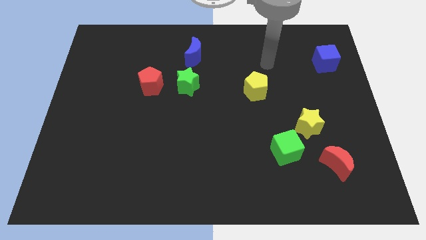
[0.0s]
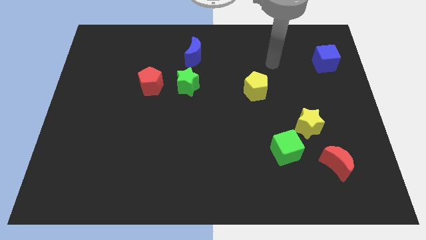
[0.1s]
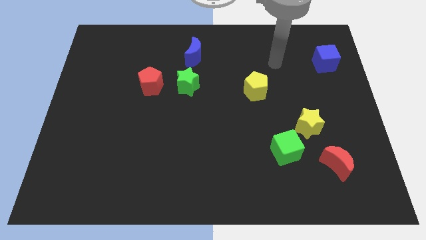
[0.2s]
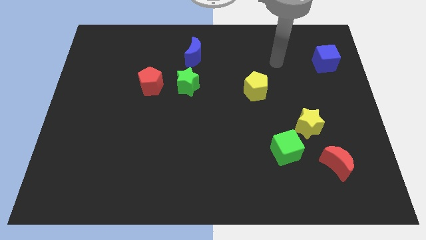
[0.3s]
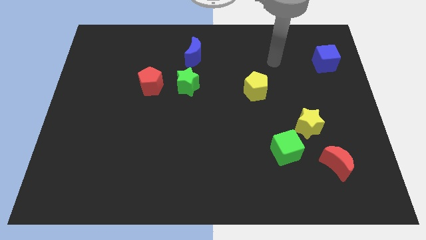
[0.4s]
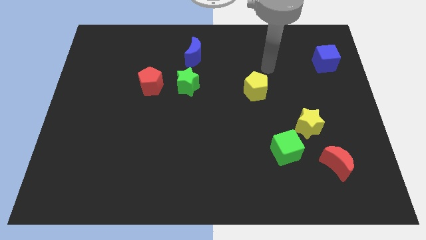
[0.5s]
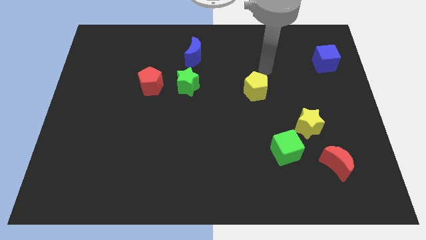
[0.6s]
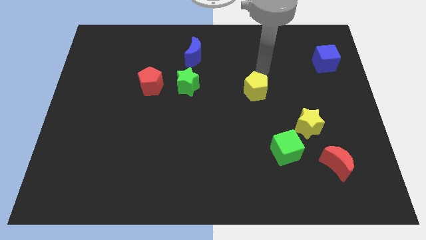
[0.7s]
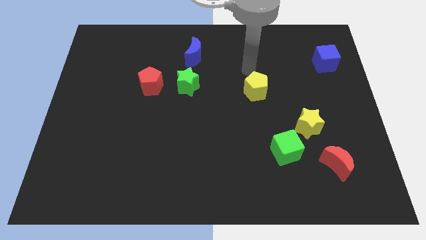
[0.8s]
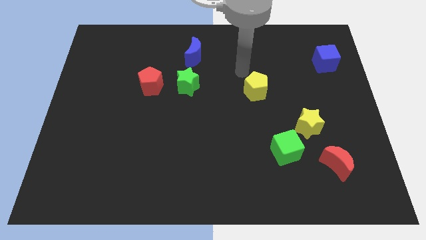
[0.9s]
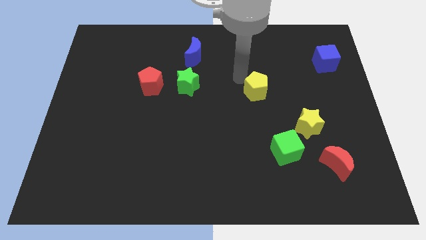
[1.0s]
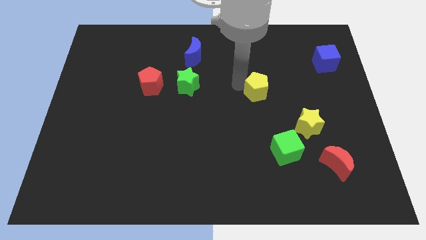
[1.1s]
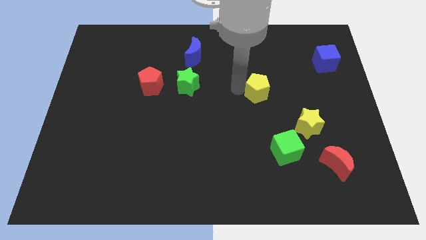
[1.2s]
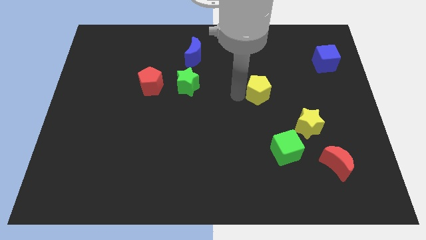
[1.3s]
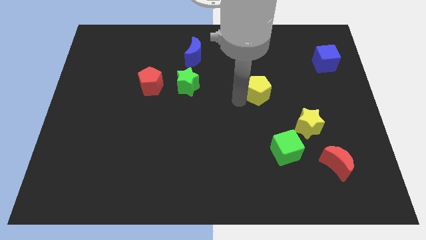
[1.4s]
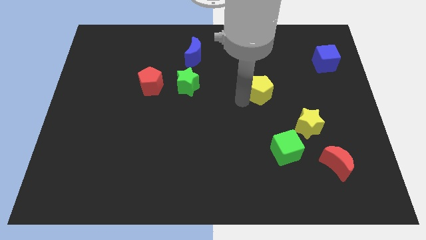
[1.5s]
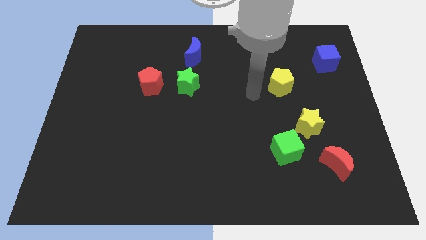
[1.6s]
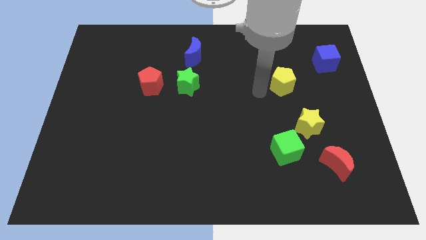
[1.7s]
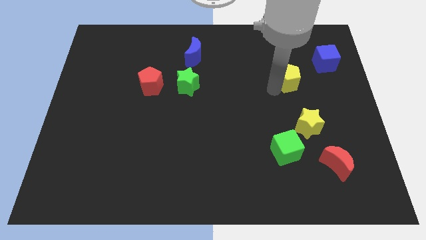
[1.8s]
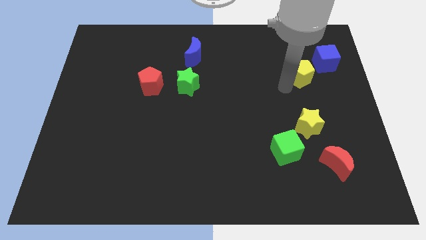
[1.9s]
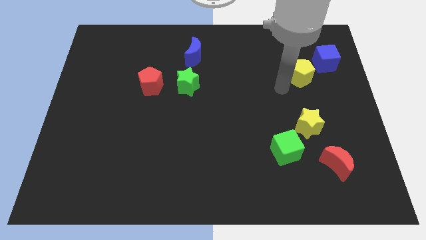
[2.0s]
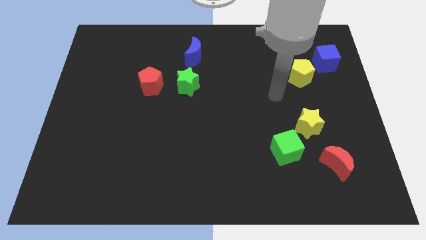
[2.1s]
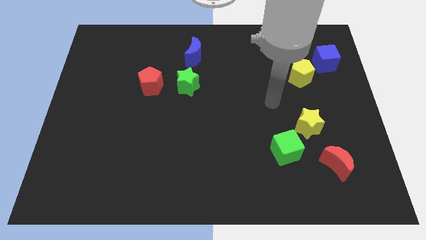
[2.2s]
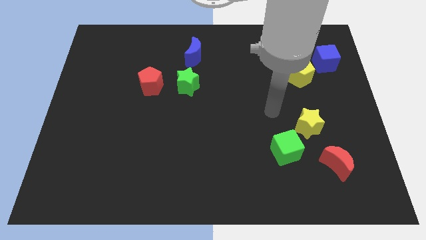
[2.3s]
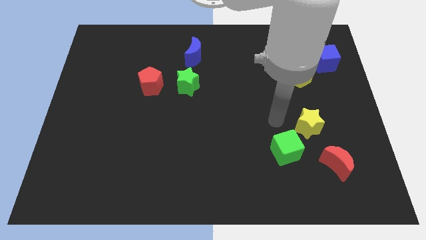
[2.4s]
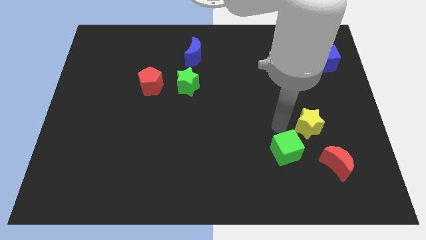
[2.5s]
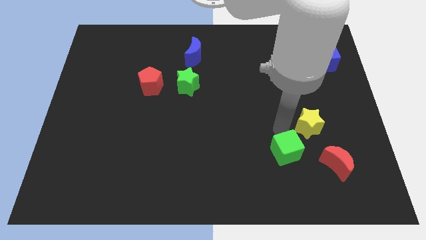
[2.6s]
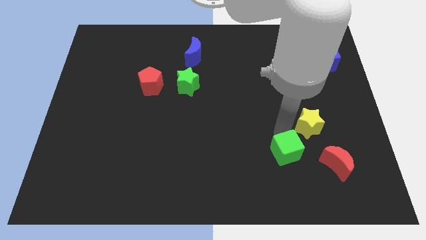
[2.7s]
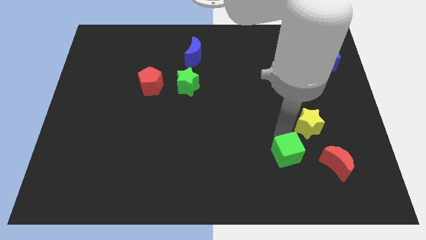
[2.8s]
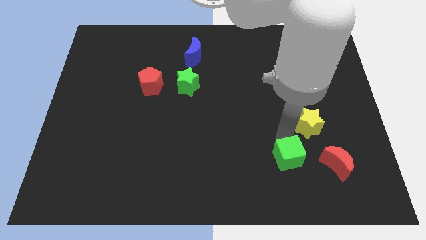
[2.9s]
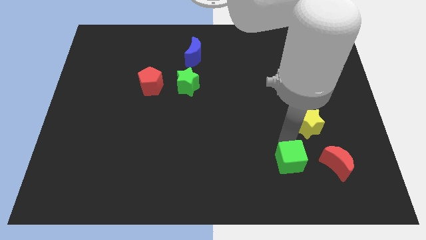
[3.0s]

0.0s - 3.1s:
move the yellow pentagon close to the blue cube

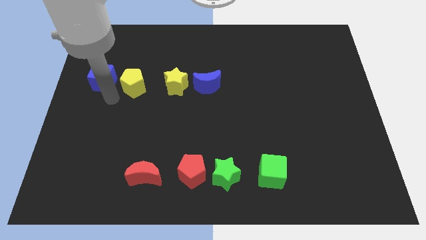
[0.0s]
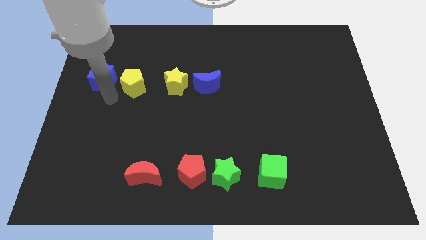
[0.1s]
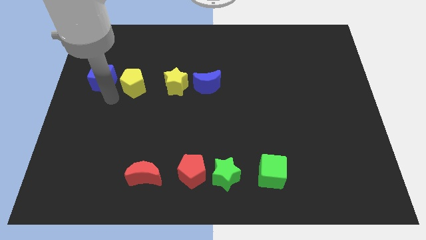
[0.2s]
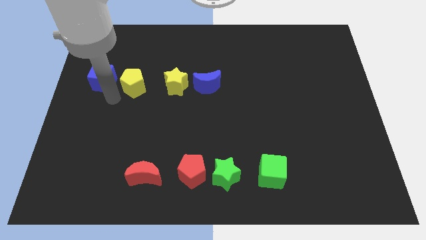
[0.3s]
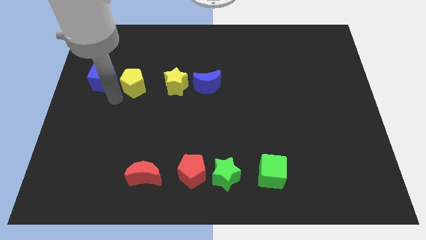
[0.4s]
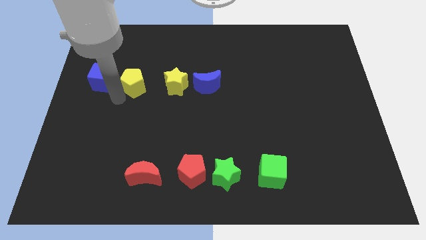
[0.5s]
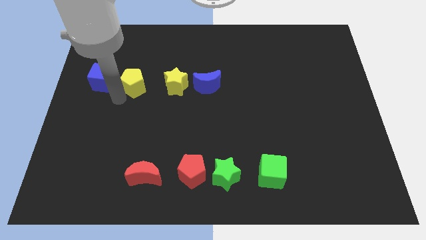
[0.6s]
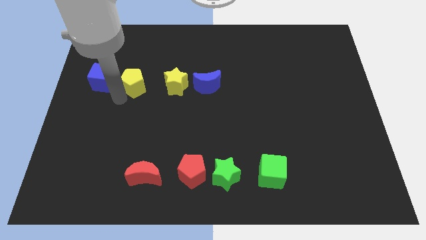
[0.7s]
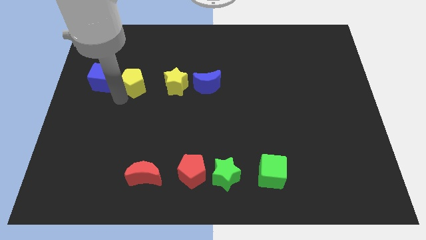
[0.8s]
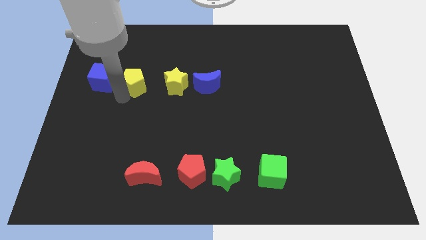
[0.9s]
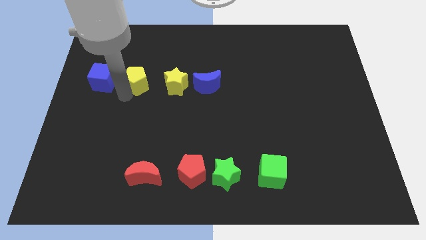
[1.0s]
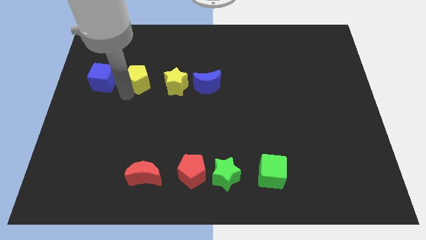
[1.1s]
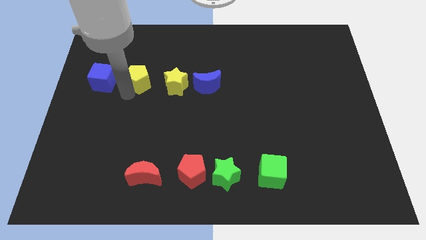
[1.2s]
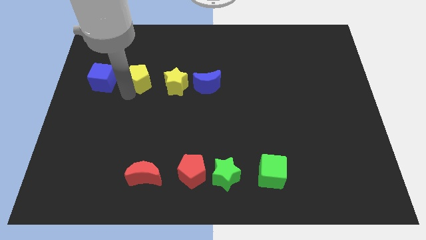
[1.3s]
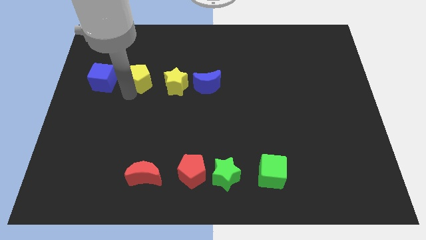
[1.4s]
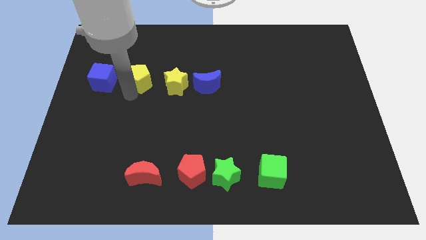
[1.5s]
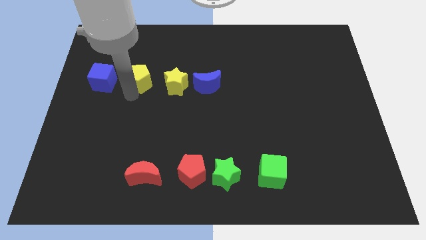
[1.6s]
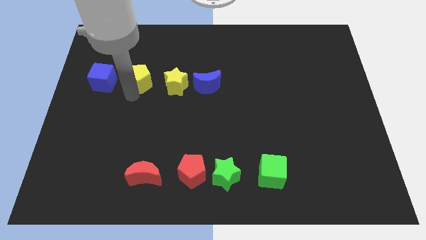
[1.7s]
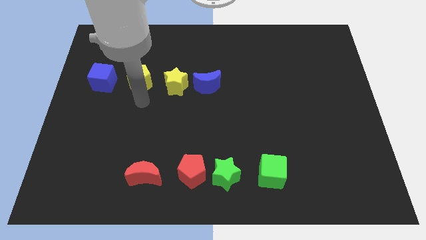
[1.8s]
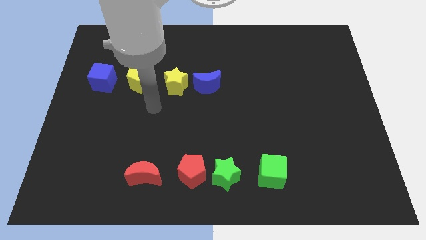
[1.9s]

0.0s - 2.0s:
slightly push the yellow pentagon to the top

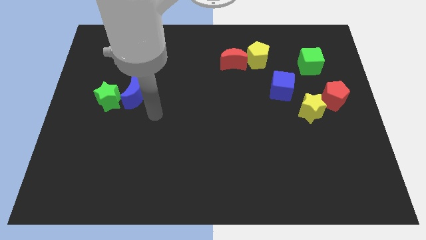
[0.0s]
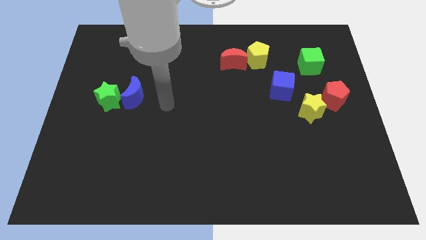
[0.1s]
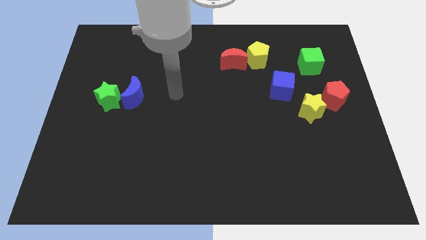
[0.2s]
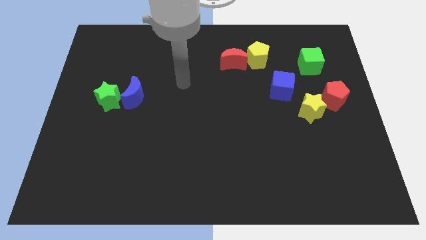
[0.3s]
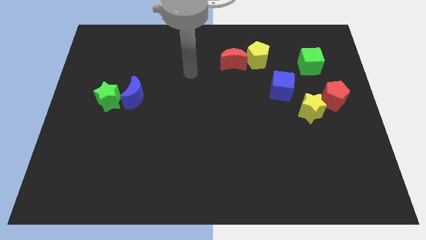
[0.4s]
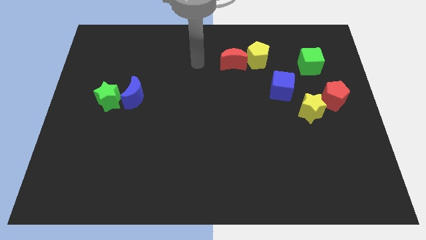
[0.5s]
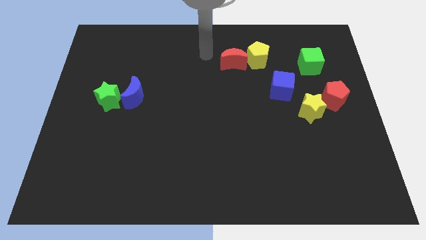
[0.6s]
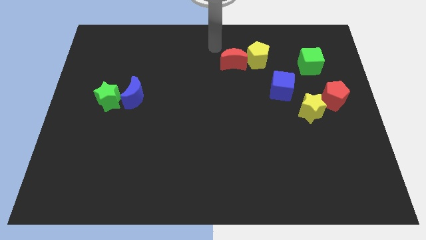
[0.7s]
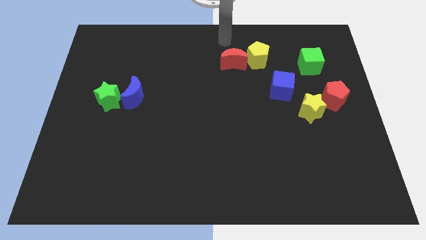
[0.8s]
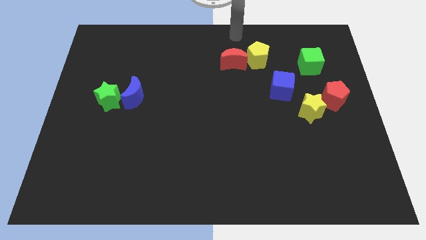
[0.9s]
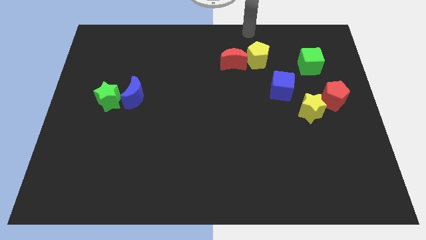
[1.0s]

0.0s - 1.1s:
move your arm away from blue moon

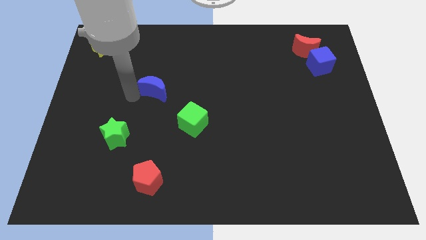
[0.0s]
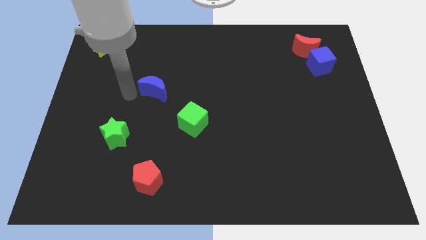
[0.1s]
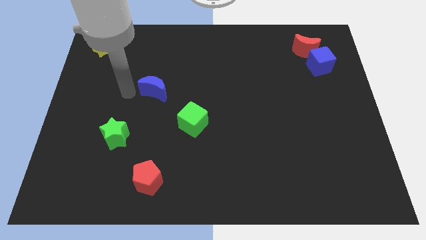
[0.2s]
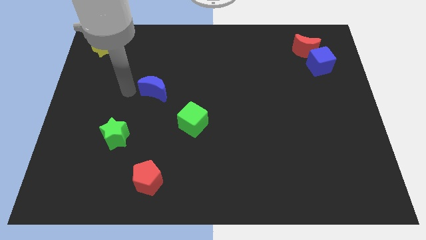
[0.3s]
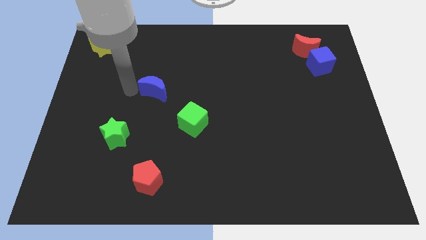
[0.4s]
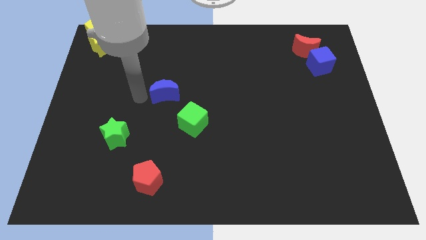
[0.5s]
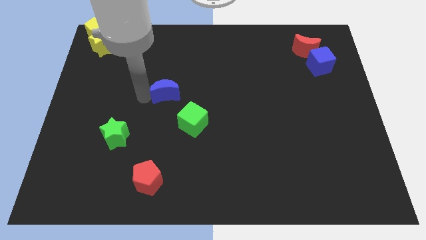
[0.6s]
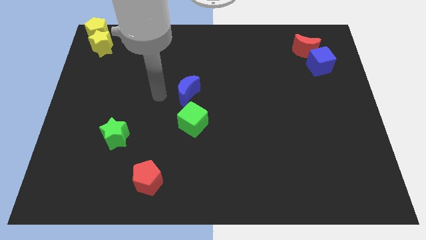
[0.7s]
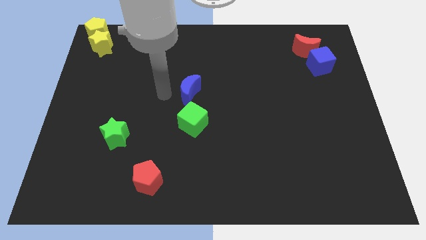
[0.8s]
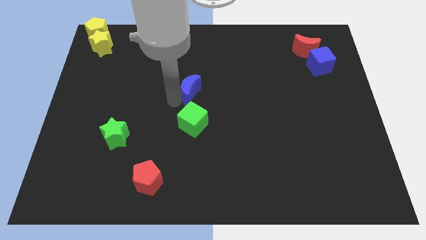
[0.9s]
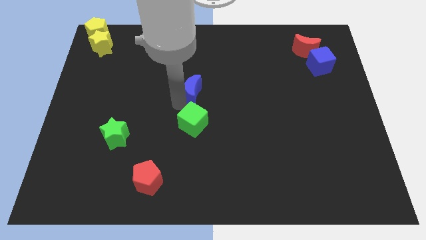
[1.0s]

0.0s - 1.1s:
place blue crescent above green cube

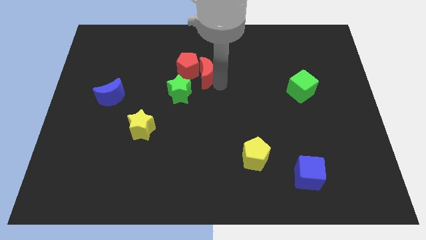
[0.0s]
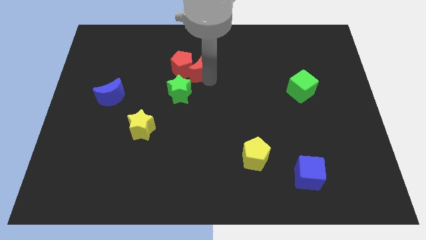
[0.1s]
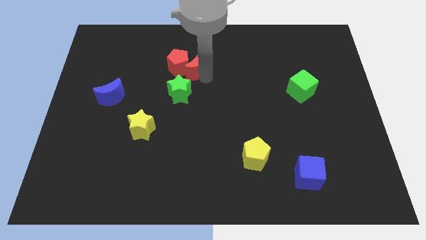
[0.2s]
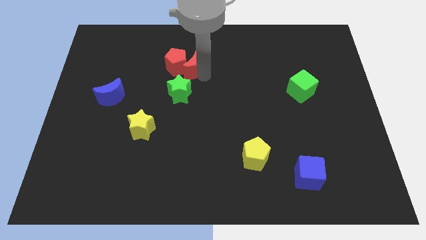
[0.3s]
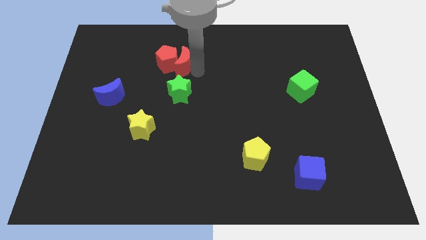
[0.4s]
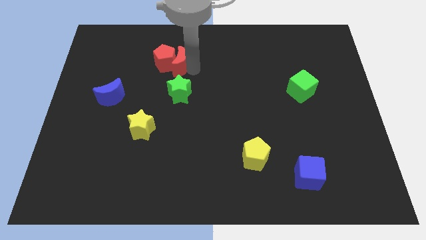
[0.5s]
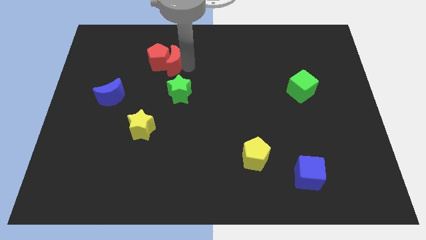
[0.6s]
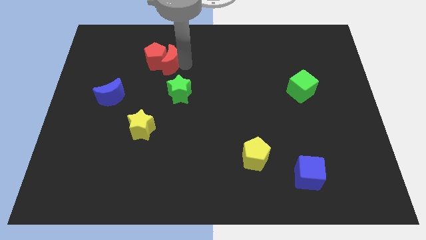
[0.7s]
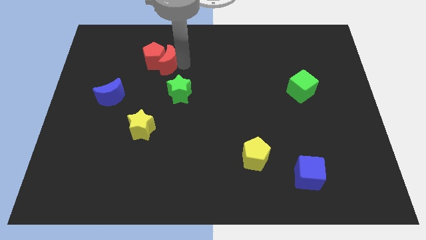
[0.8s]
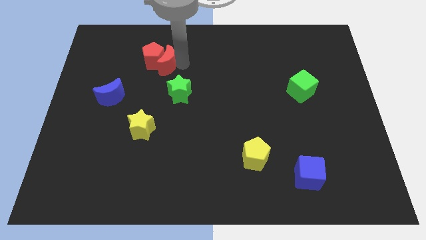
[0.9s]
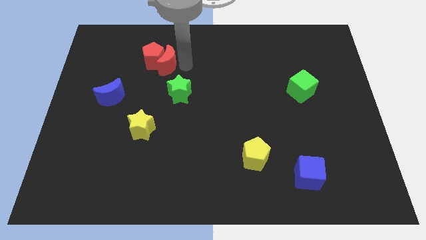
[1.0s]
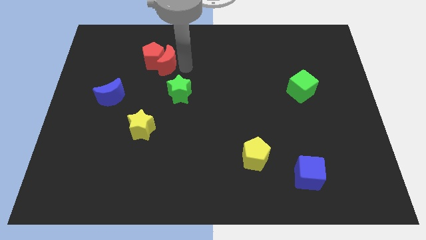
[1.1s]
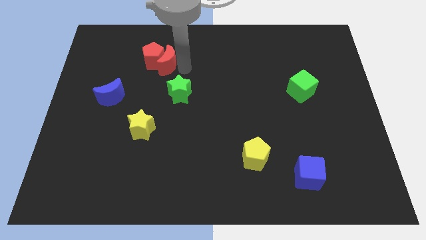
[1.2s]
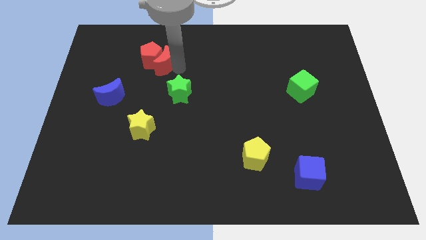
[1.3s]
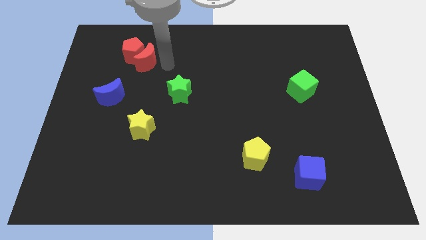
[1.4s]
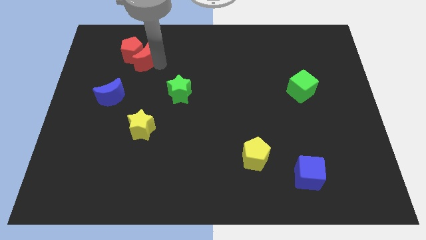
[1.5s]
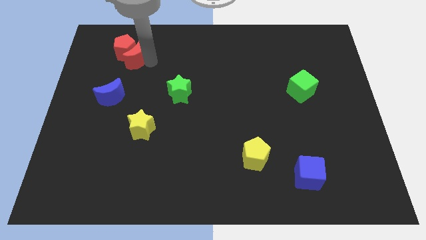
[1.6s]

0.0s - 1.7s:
push red crescent into red pentagon
